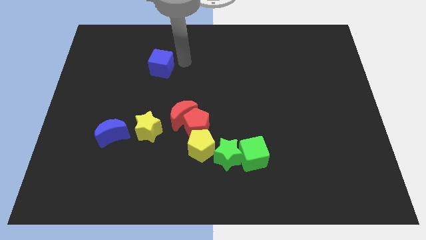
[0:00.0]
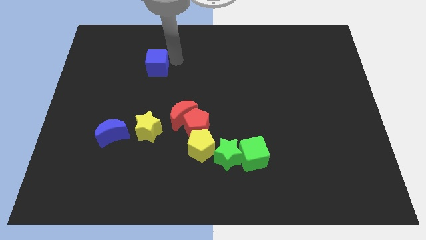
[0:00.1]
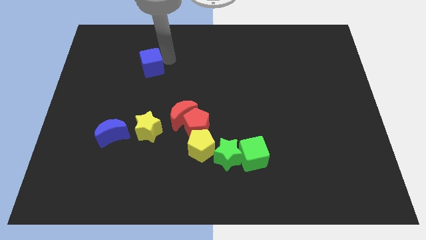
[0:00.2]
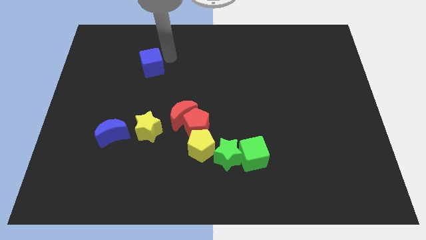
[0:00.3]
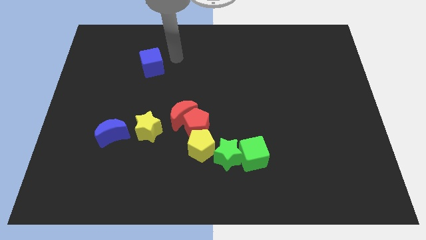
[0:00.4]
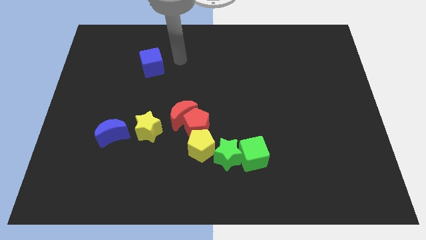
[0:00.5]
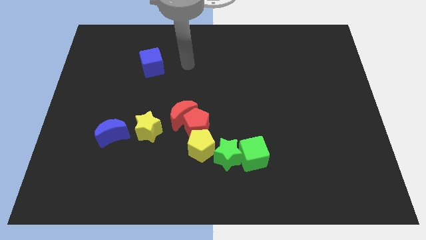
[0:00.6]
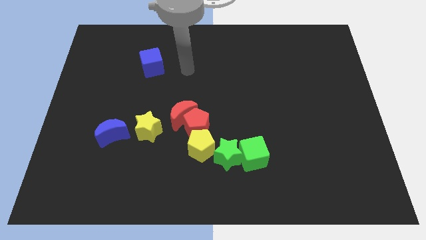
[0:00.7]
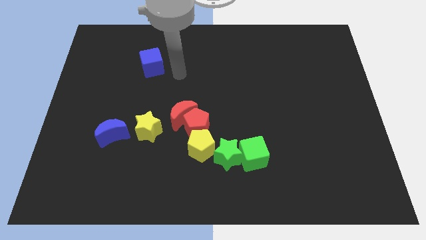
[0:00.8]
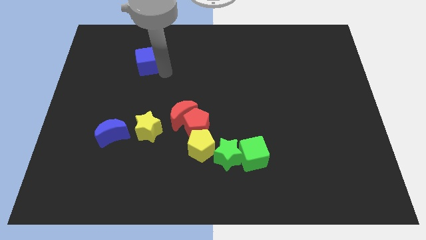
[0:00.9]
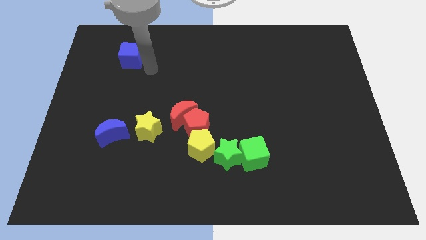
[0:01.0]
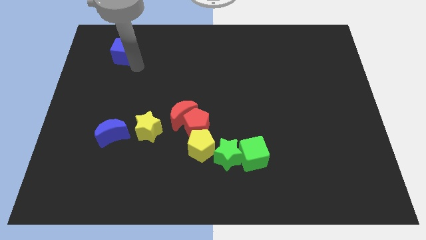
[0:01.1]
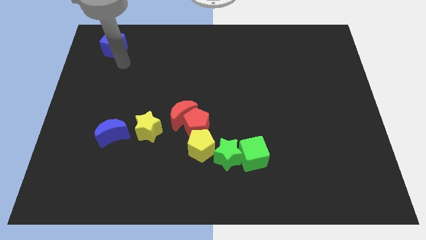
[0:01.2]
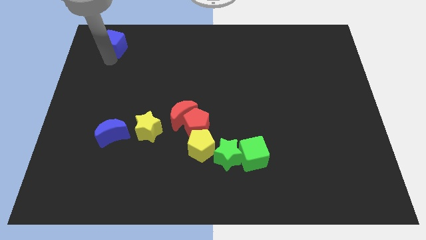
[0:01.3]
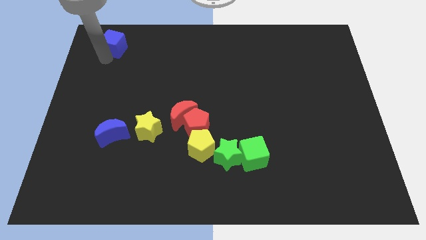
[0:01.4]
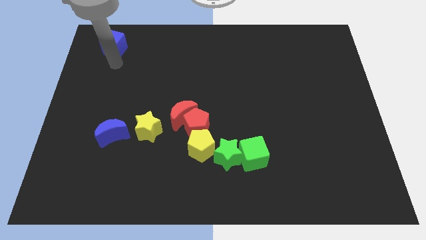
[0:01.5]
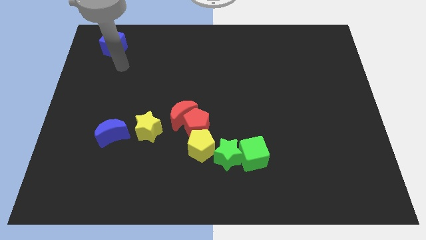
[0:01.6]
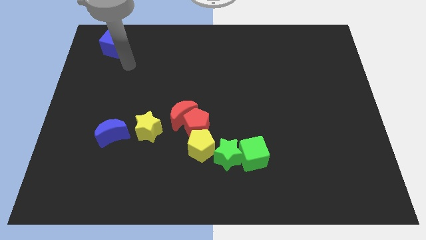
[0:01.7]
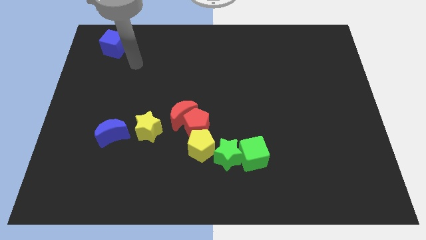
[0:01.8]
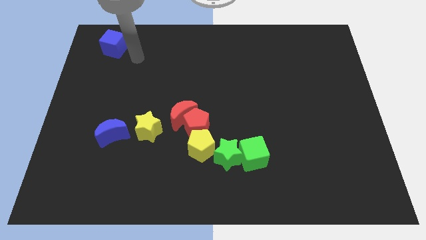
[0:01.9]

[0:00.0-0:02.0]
move the blue cube at the top left corner

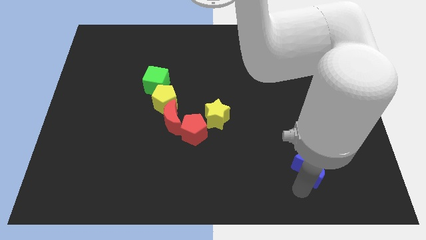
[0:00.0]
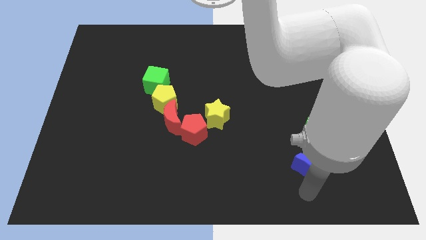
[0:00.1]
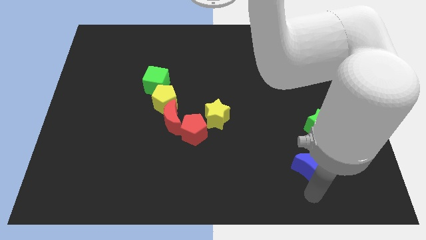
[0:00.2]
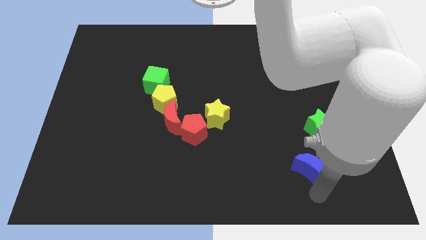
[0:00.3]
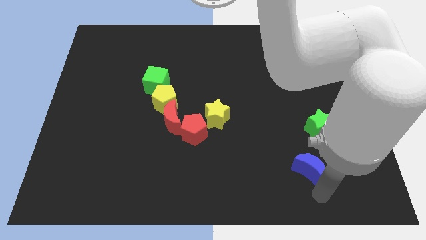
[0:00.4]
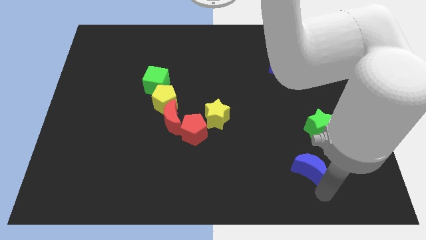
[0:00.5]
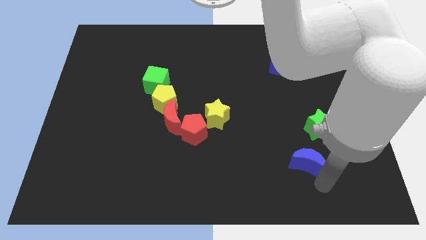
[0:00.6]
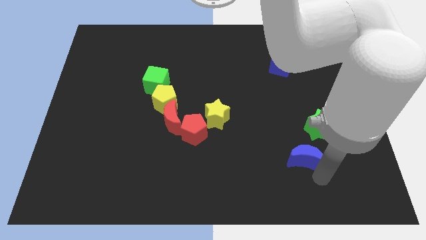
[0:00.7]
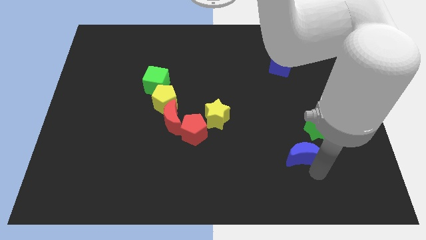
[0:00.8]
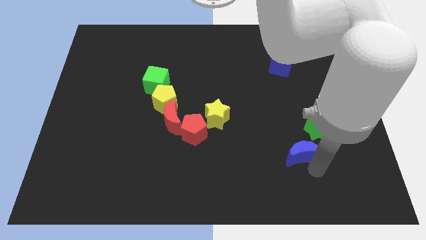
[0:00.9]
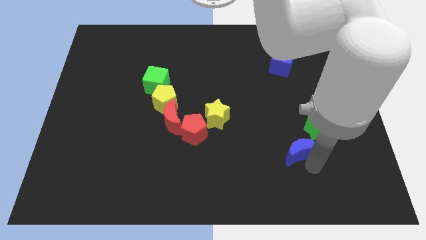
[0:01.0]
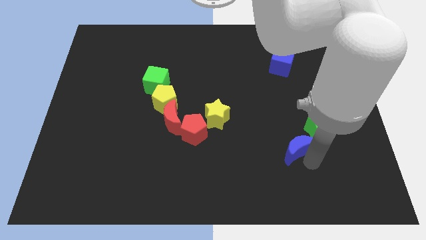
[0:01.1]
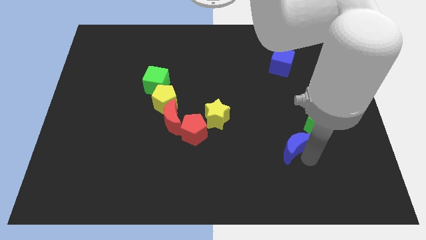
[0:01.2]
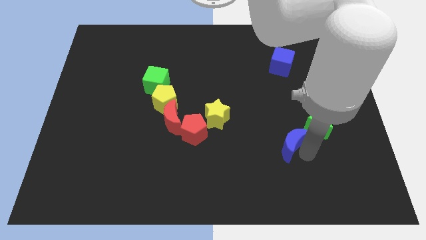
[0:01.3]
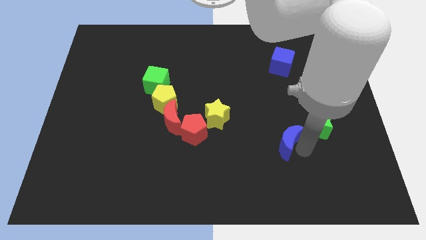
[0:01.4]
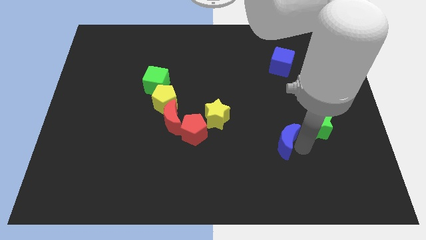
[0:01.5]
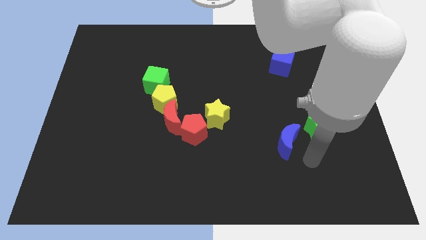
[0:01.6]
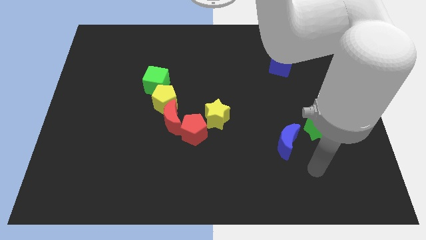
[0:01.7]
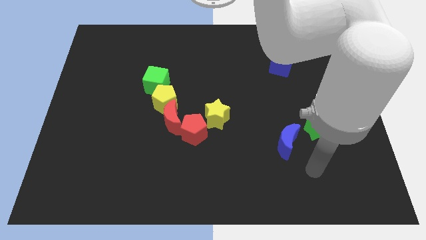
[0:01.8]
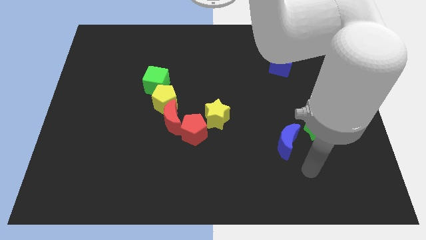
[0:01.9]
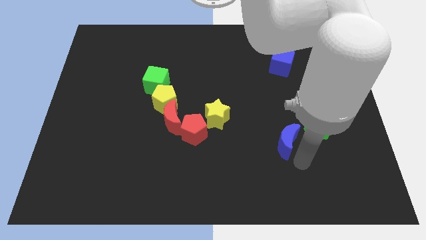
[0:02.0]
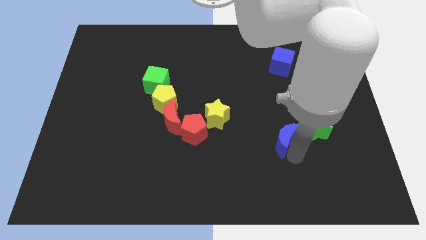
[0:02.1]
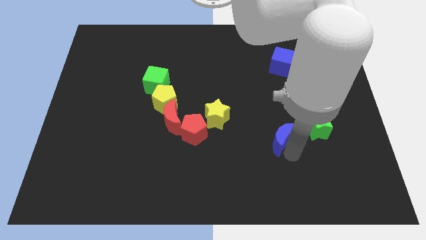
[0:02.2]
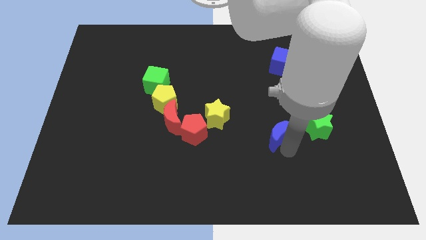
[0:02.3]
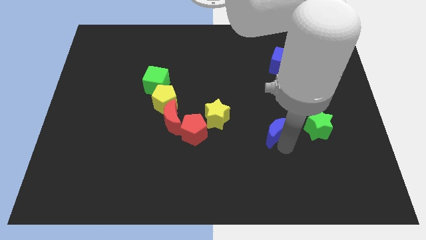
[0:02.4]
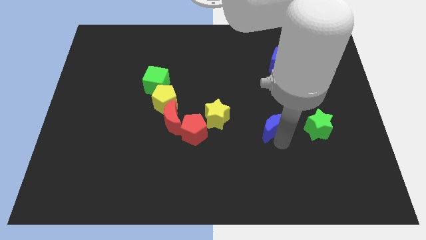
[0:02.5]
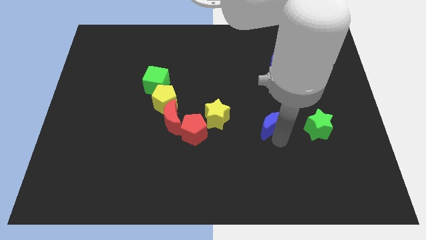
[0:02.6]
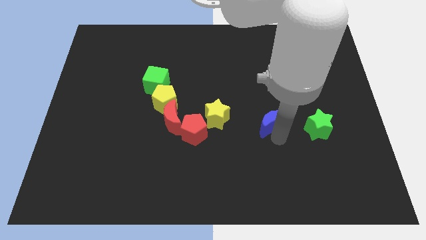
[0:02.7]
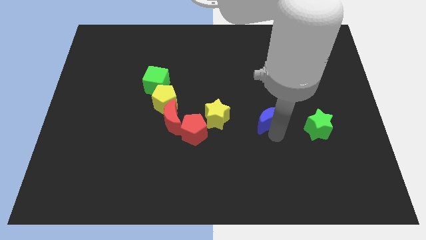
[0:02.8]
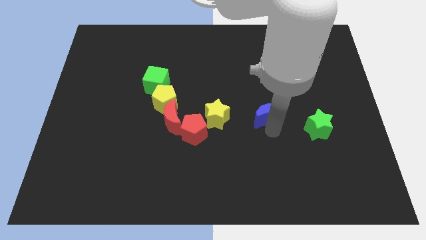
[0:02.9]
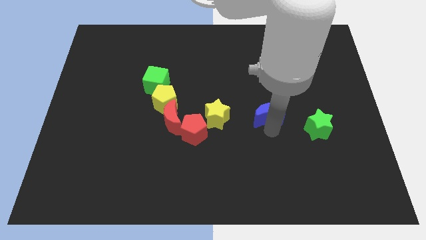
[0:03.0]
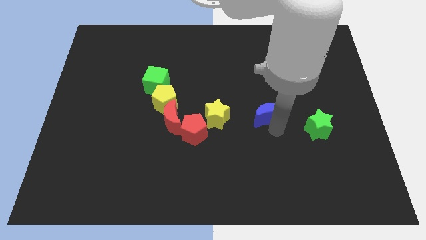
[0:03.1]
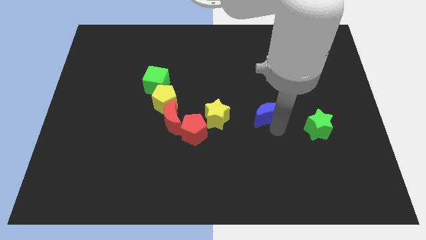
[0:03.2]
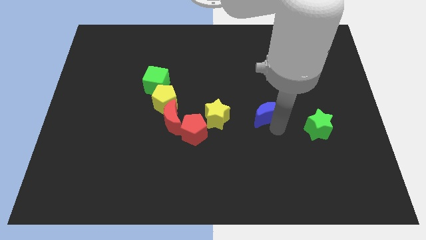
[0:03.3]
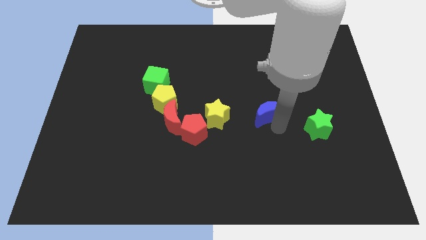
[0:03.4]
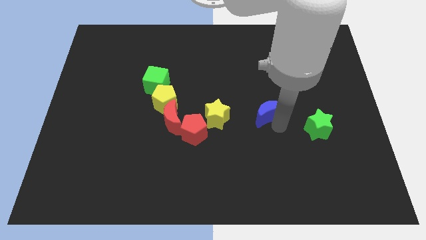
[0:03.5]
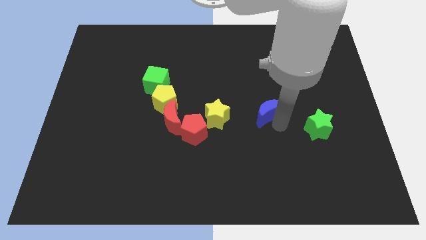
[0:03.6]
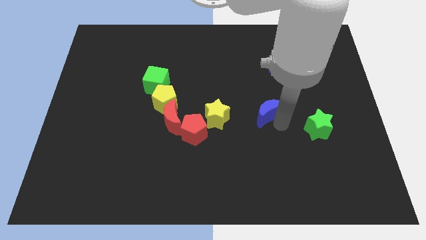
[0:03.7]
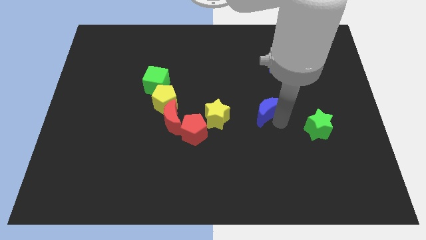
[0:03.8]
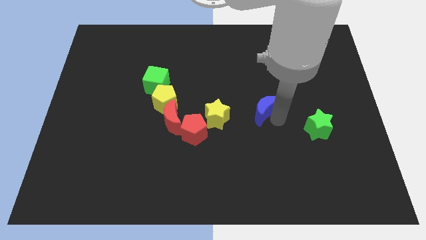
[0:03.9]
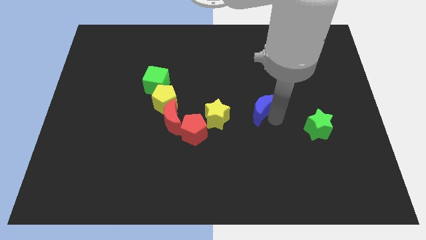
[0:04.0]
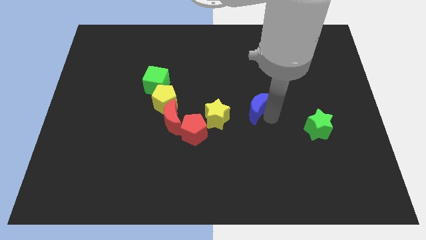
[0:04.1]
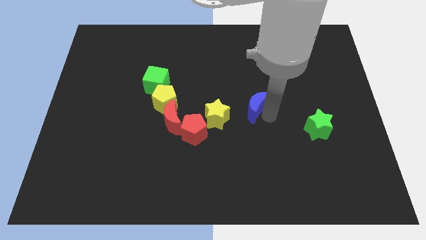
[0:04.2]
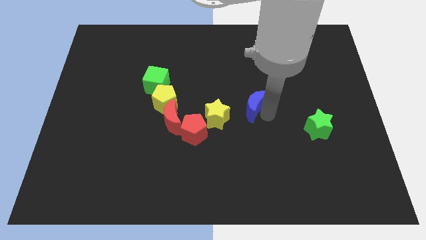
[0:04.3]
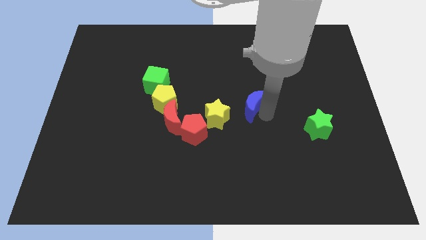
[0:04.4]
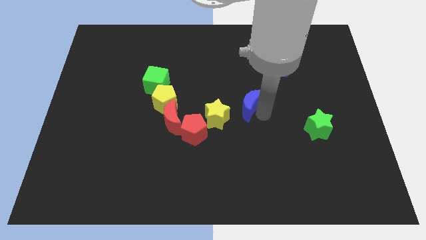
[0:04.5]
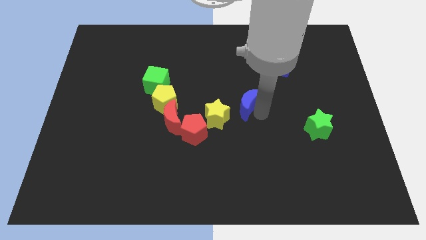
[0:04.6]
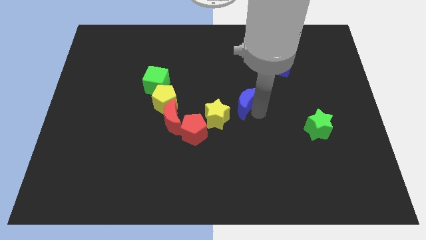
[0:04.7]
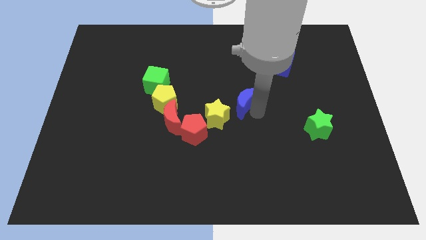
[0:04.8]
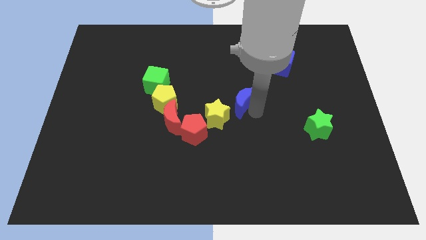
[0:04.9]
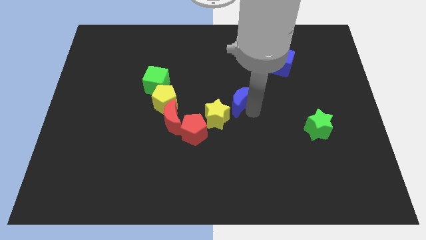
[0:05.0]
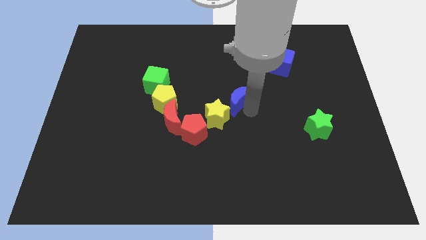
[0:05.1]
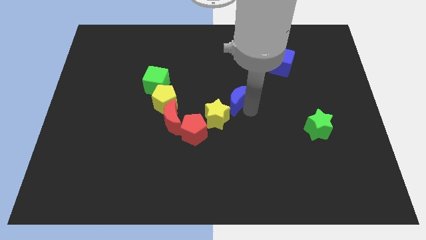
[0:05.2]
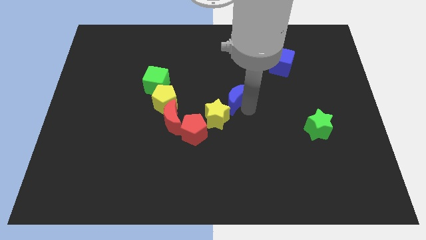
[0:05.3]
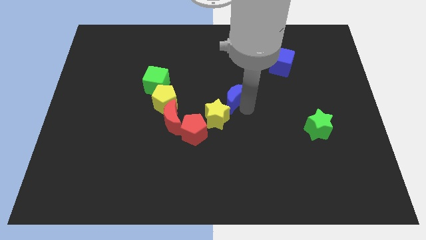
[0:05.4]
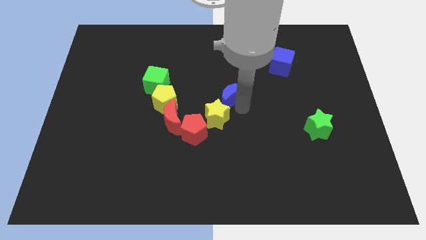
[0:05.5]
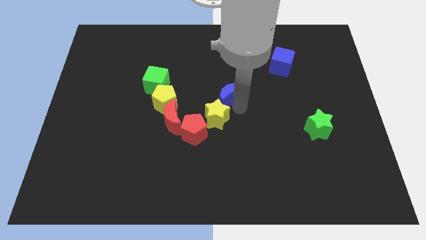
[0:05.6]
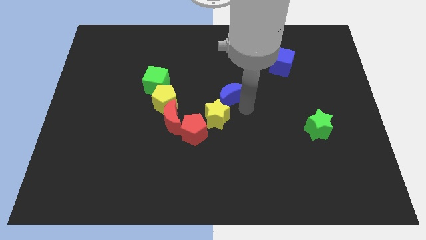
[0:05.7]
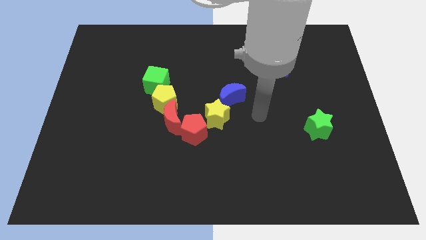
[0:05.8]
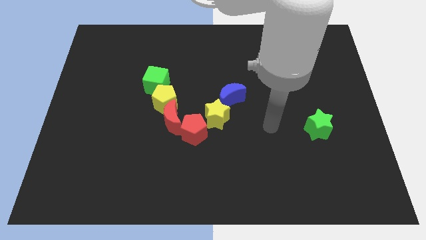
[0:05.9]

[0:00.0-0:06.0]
push the blue crescent to the right of the yellow star

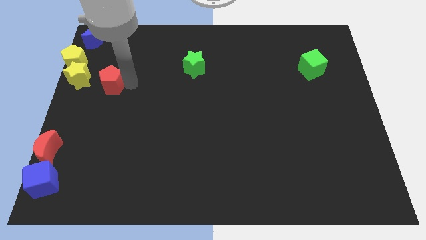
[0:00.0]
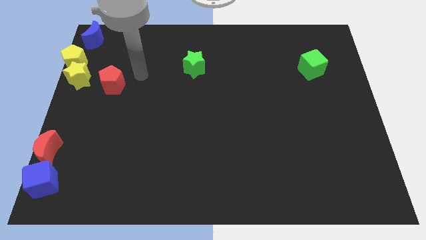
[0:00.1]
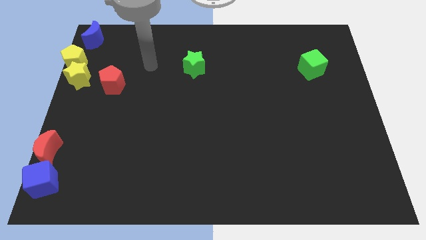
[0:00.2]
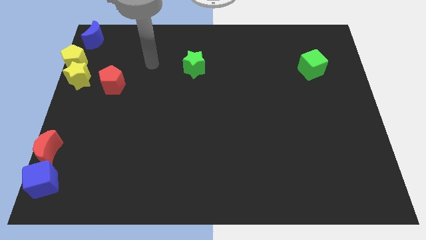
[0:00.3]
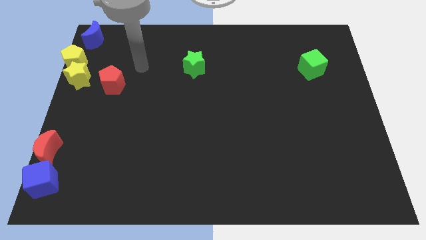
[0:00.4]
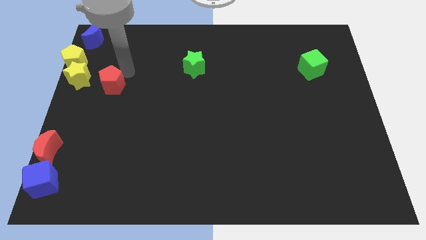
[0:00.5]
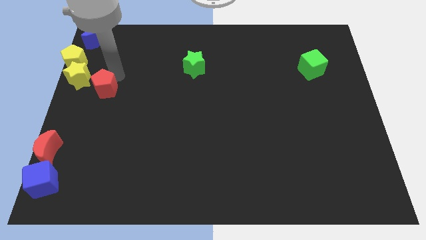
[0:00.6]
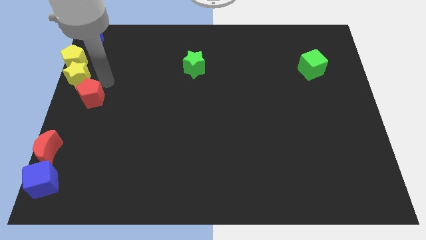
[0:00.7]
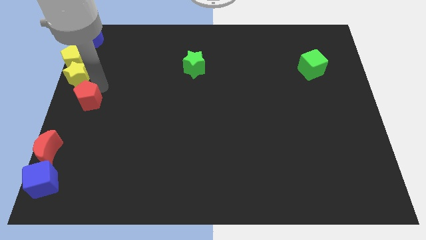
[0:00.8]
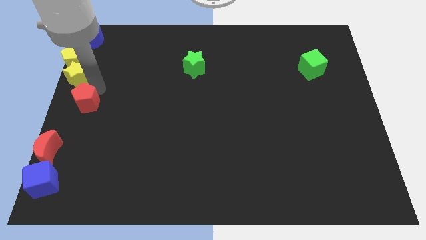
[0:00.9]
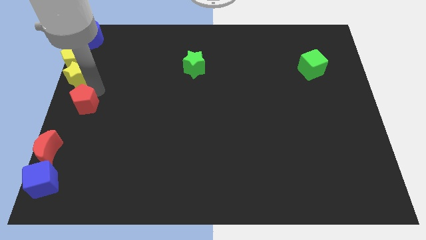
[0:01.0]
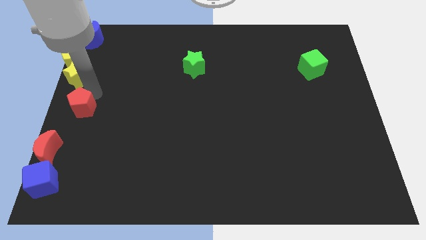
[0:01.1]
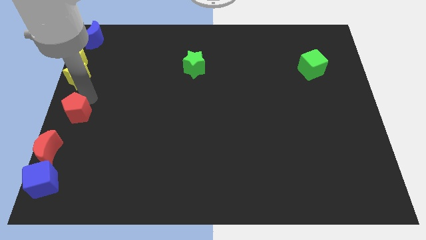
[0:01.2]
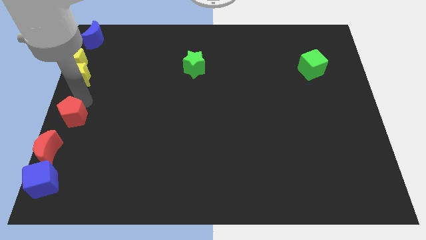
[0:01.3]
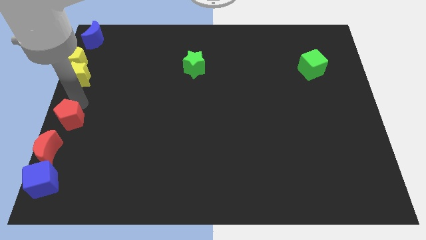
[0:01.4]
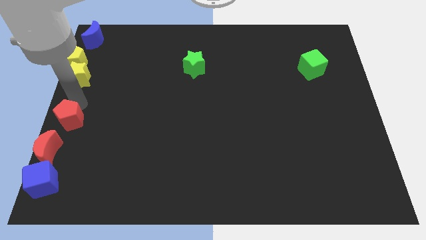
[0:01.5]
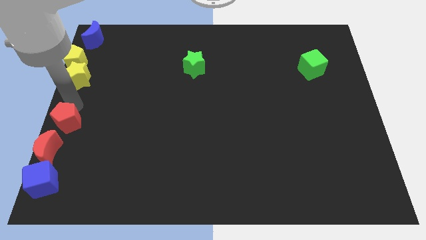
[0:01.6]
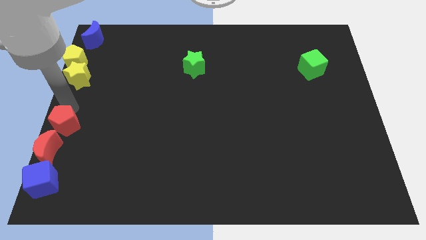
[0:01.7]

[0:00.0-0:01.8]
move the red pentagon above the red crescent
